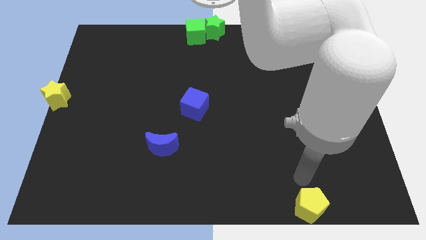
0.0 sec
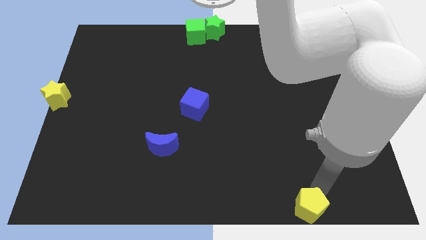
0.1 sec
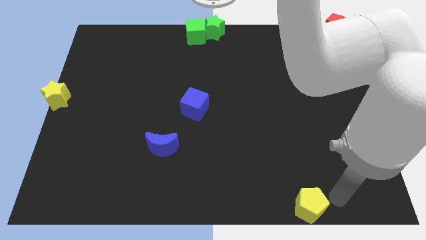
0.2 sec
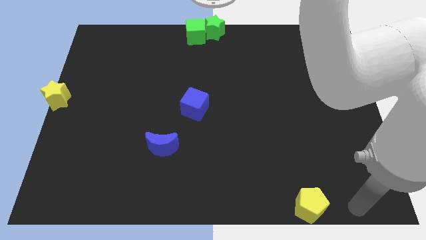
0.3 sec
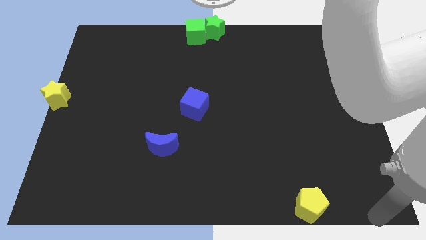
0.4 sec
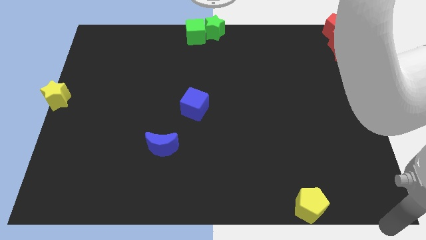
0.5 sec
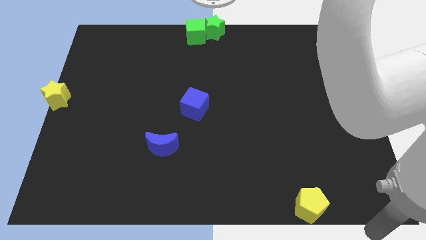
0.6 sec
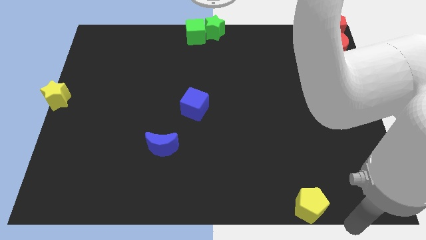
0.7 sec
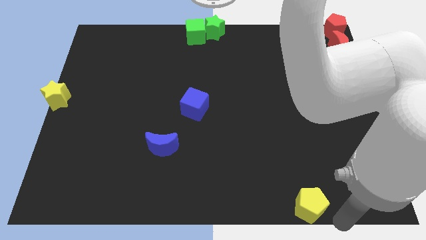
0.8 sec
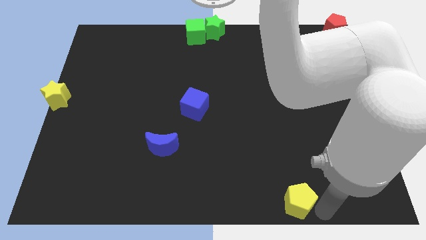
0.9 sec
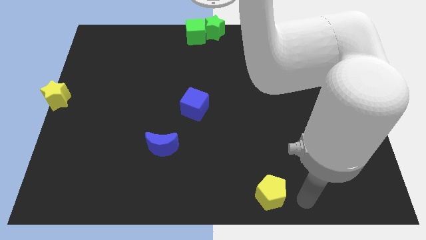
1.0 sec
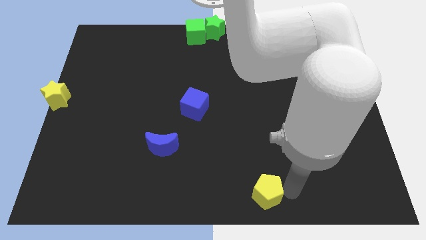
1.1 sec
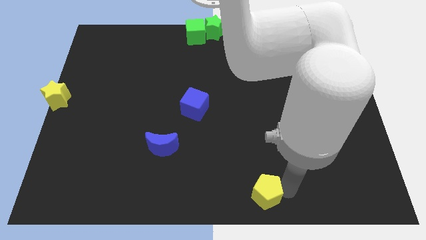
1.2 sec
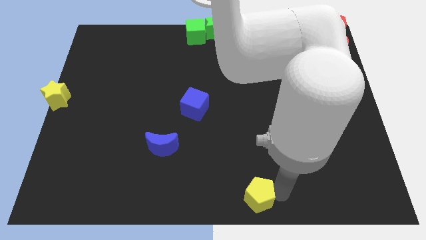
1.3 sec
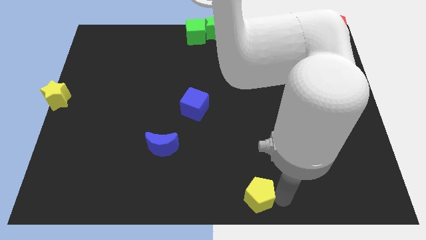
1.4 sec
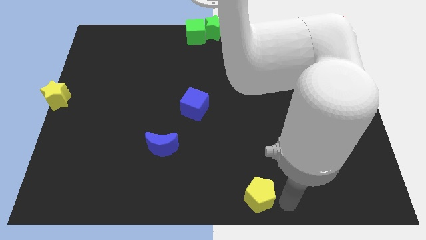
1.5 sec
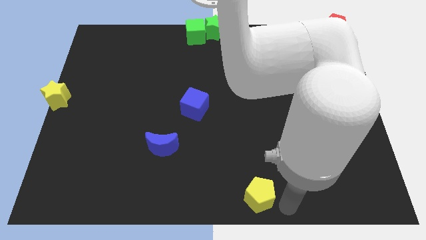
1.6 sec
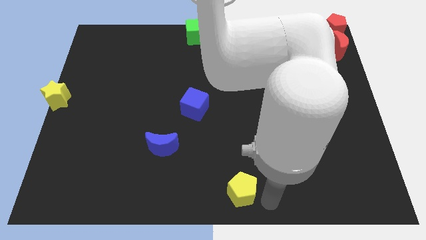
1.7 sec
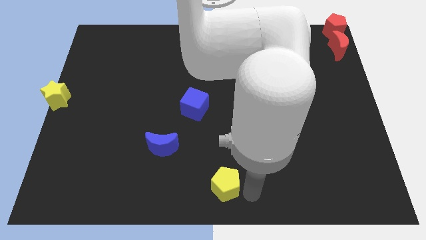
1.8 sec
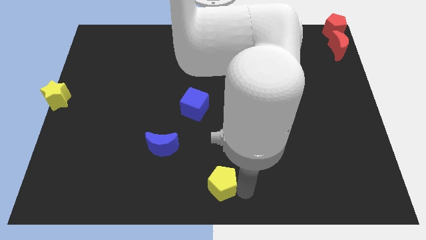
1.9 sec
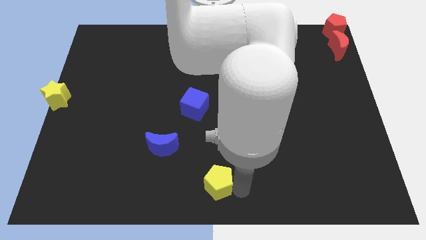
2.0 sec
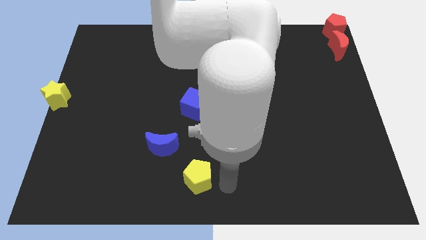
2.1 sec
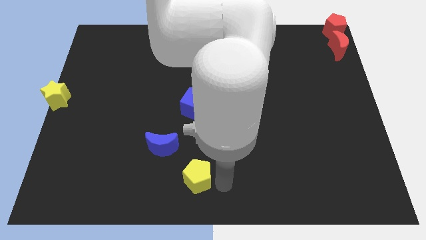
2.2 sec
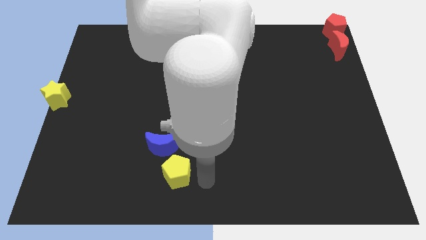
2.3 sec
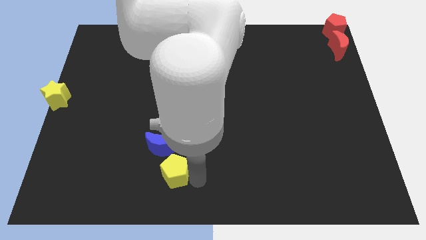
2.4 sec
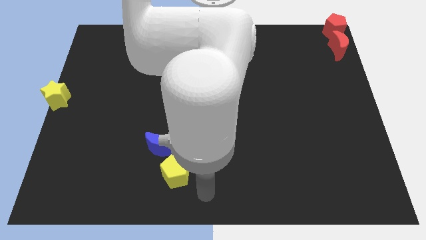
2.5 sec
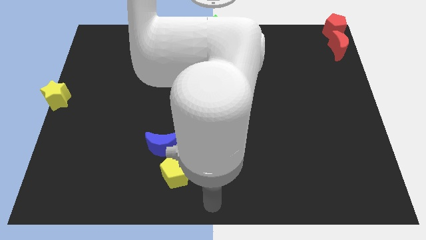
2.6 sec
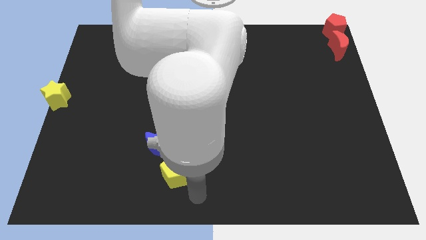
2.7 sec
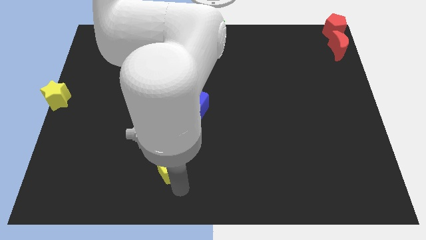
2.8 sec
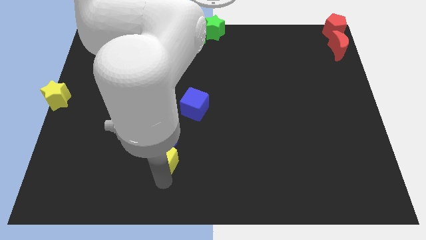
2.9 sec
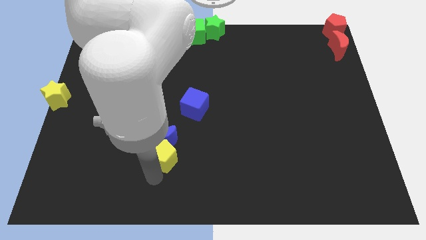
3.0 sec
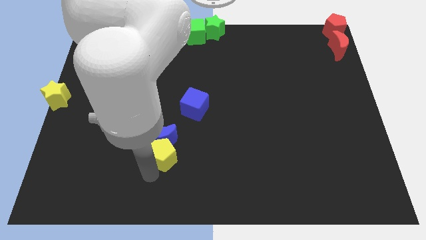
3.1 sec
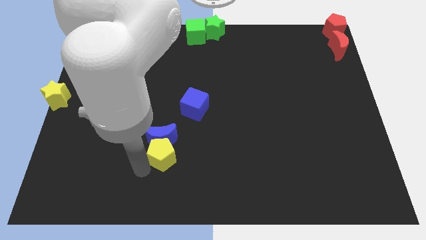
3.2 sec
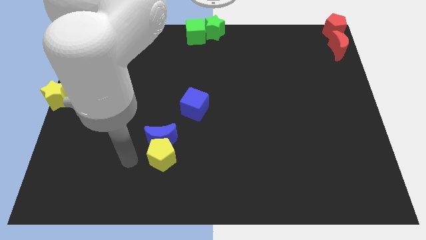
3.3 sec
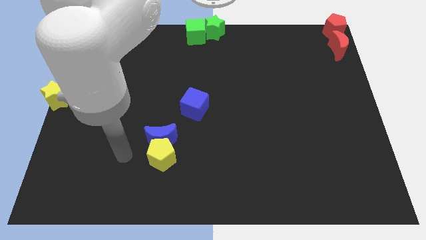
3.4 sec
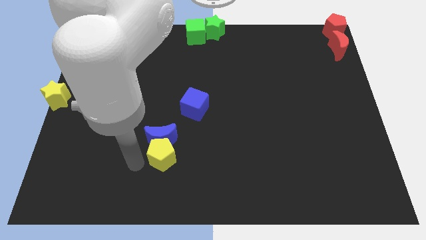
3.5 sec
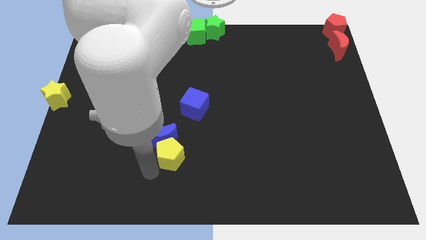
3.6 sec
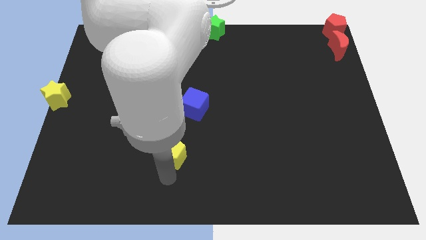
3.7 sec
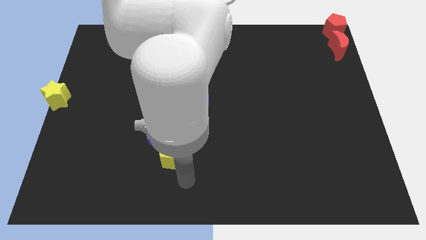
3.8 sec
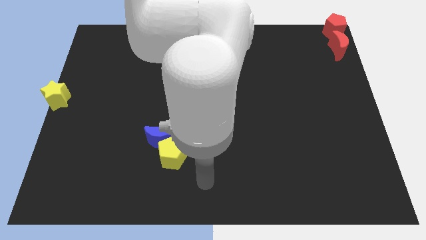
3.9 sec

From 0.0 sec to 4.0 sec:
move yellow pentagon into the blue crescent

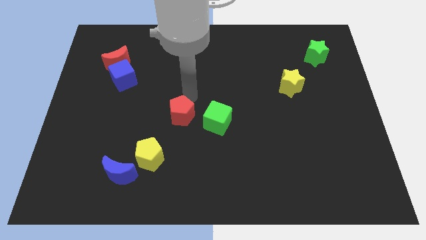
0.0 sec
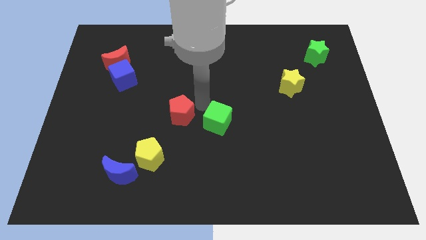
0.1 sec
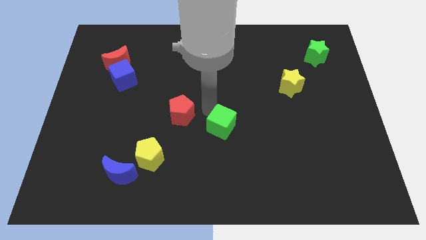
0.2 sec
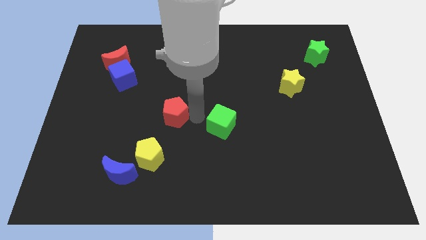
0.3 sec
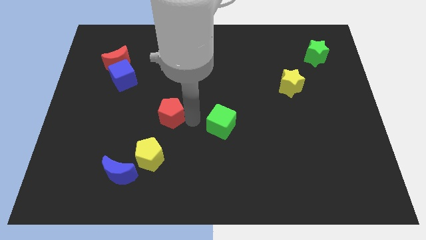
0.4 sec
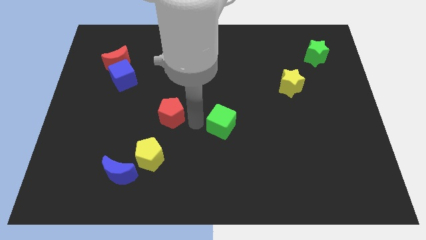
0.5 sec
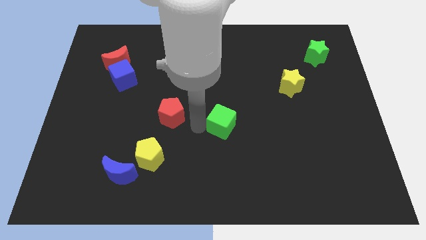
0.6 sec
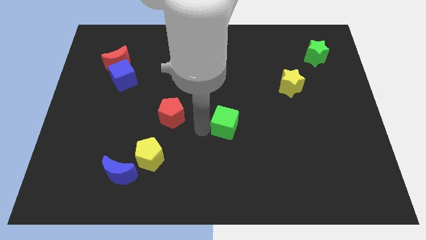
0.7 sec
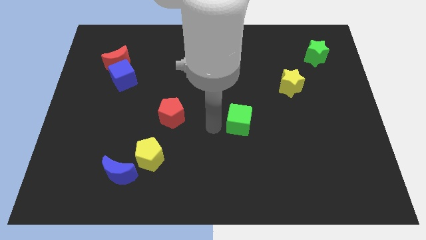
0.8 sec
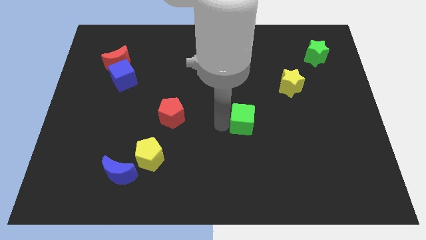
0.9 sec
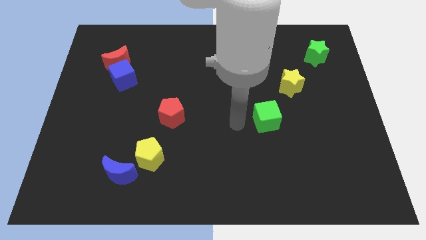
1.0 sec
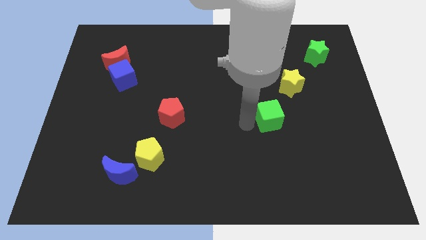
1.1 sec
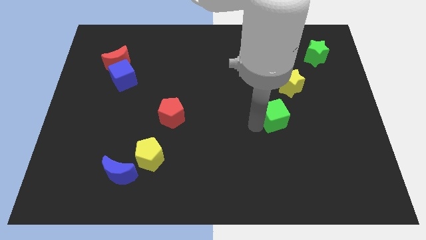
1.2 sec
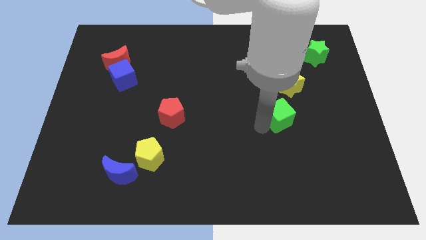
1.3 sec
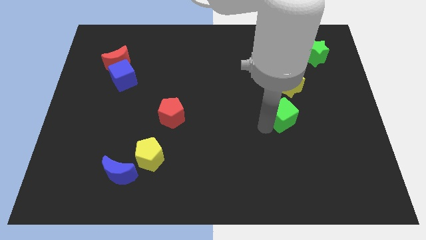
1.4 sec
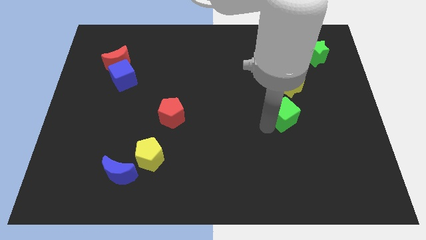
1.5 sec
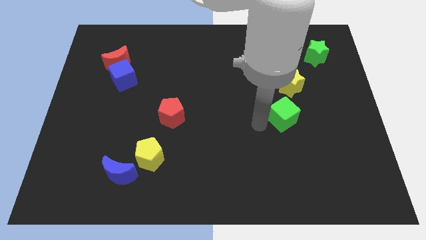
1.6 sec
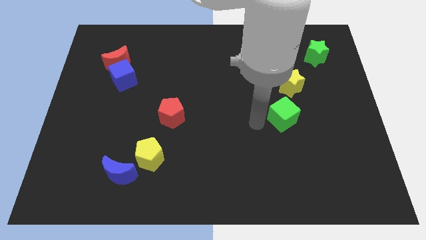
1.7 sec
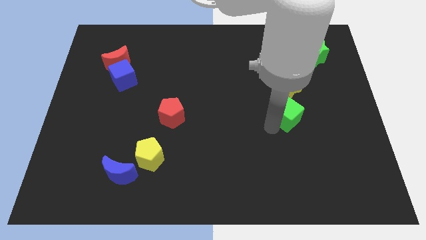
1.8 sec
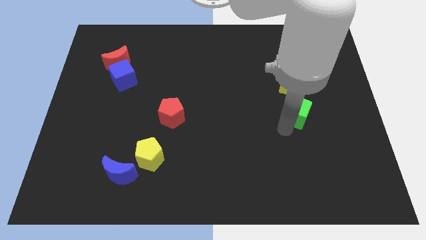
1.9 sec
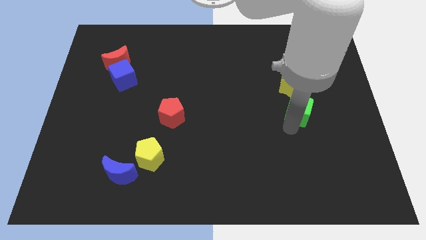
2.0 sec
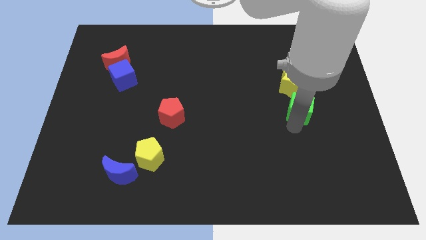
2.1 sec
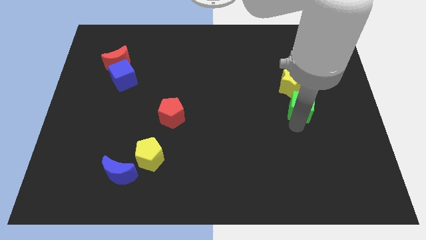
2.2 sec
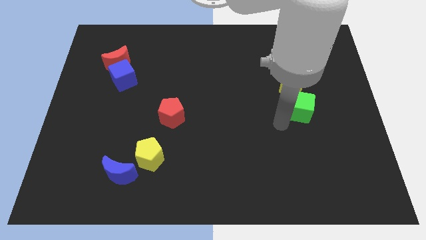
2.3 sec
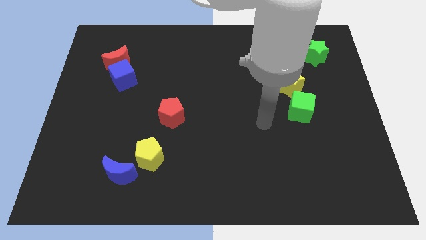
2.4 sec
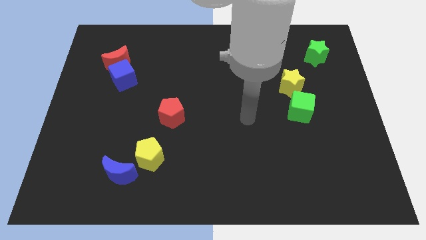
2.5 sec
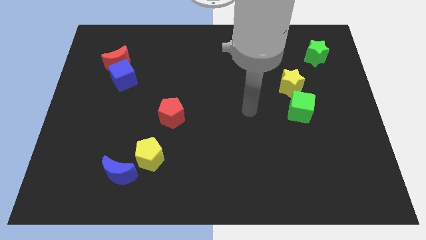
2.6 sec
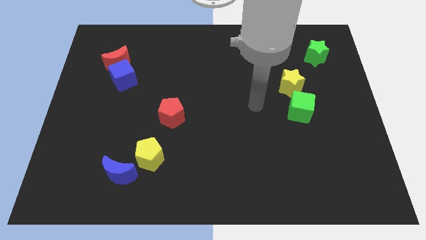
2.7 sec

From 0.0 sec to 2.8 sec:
place the green cube down to the yellow star

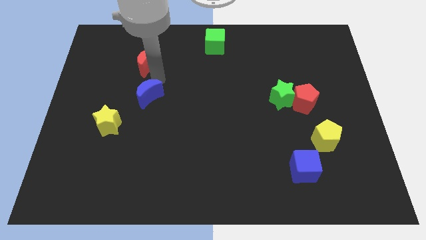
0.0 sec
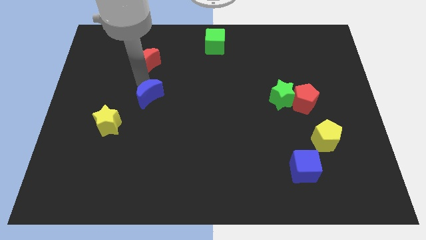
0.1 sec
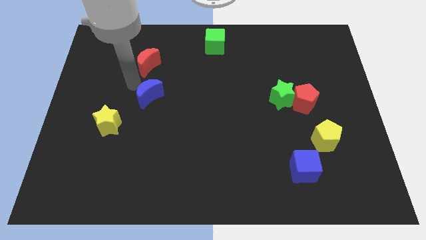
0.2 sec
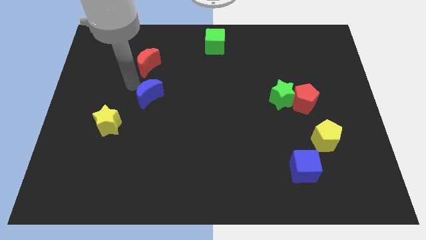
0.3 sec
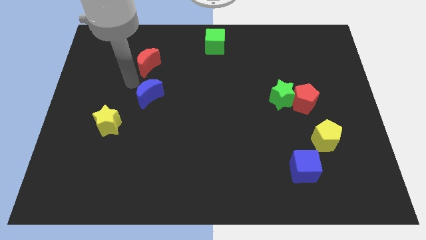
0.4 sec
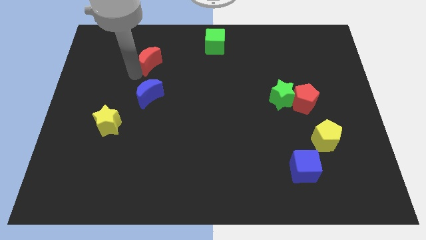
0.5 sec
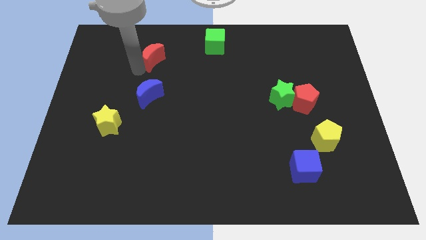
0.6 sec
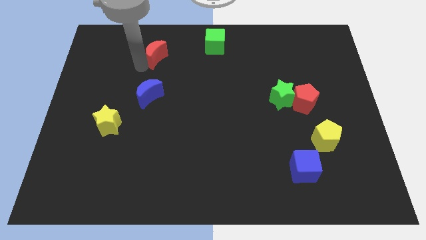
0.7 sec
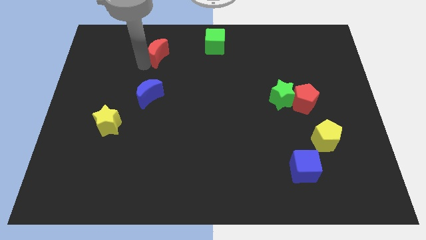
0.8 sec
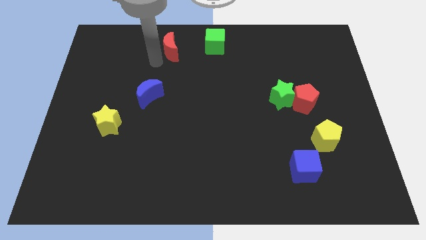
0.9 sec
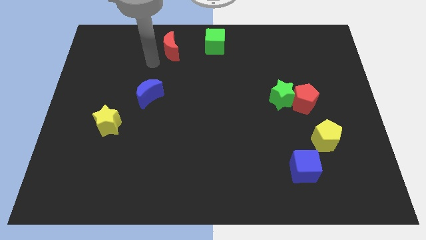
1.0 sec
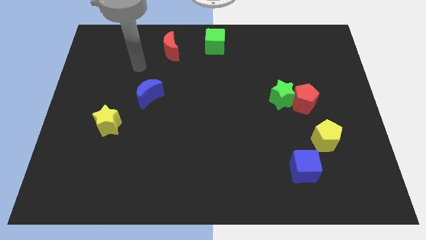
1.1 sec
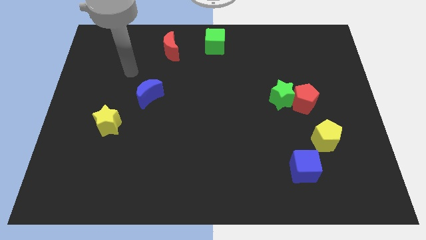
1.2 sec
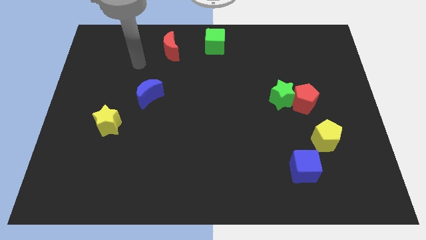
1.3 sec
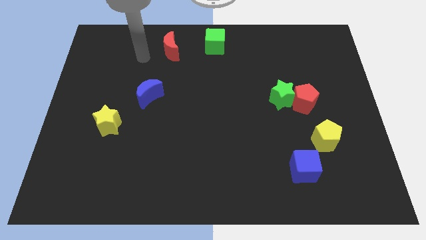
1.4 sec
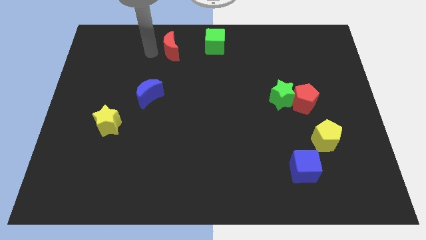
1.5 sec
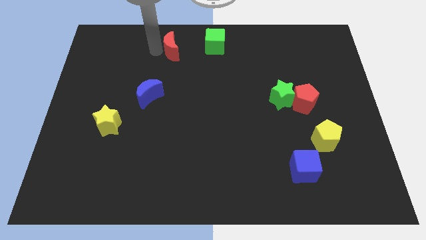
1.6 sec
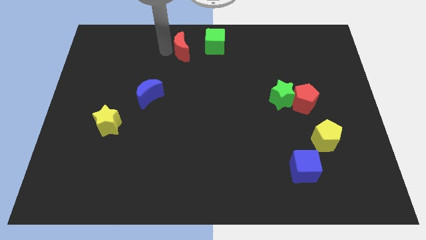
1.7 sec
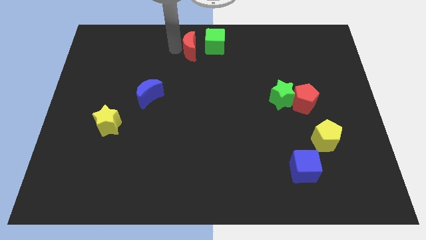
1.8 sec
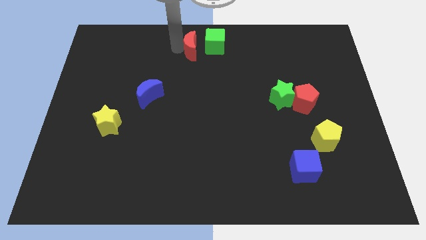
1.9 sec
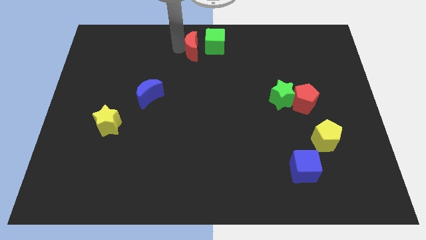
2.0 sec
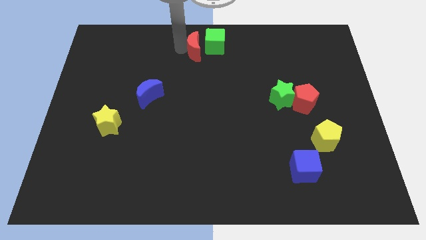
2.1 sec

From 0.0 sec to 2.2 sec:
drag the red crescent diagonal to the blue crescent
